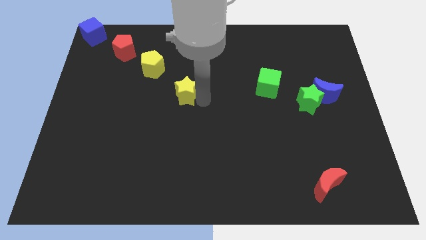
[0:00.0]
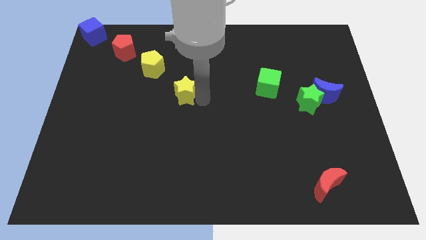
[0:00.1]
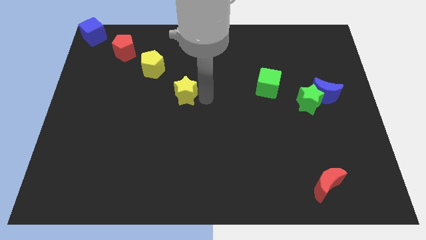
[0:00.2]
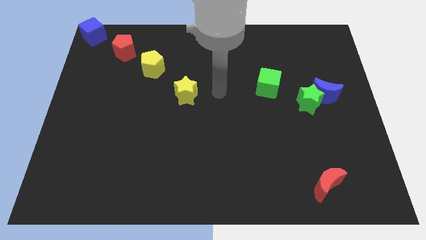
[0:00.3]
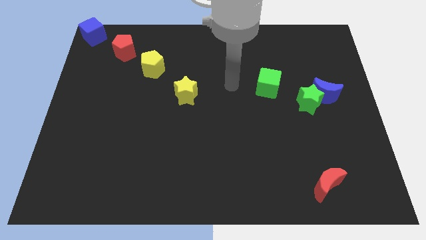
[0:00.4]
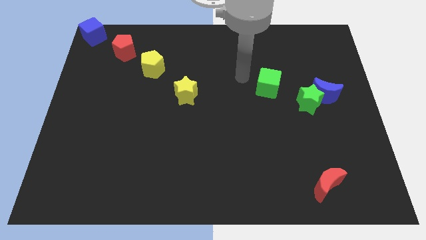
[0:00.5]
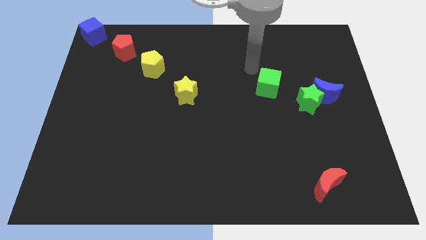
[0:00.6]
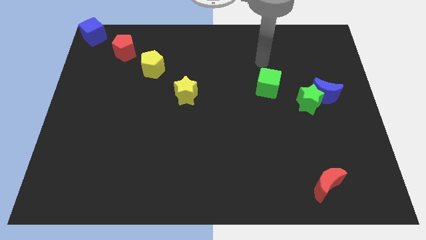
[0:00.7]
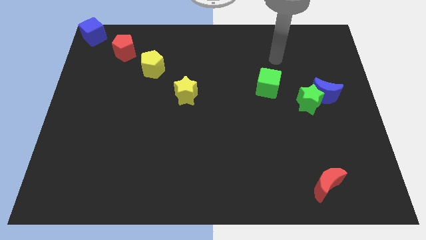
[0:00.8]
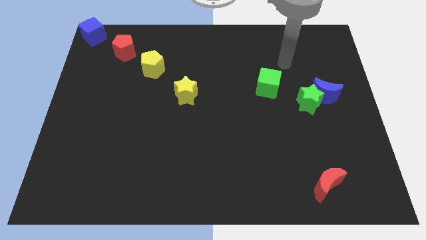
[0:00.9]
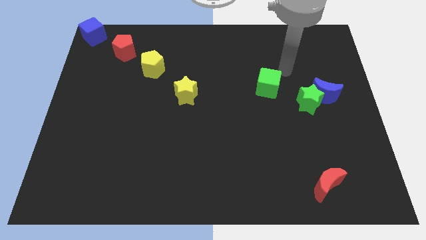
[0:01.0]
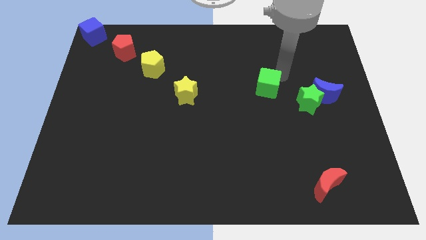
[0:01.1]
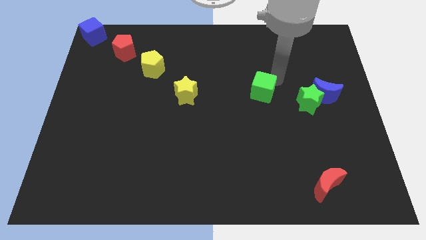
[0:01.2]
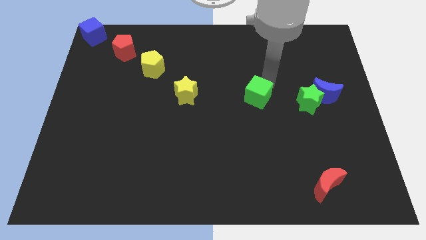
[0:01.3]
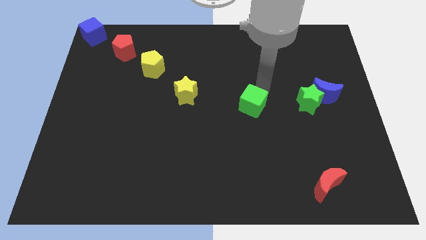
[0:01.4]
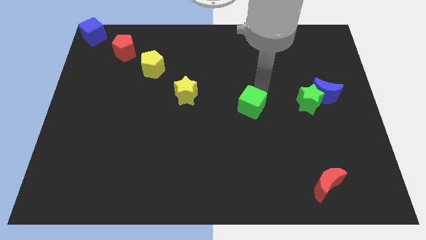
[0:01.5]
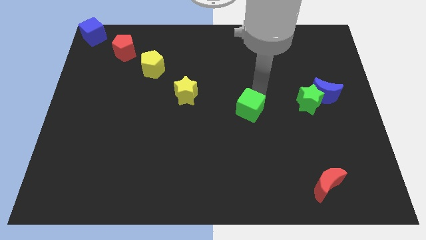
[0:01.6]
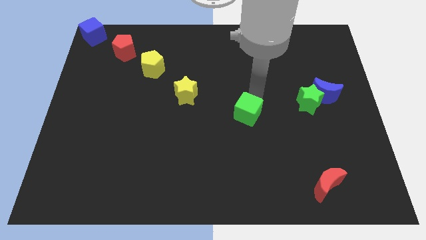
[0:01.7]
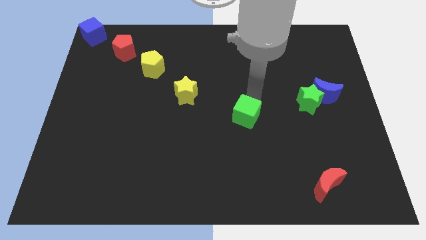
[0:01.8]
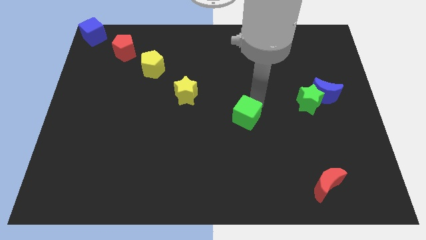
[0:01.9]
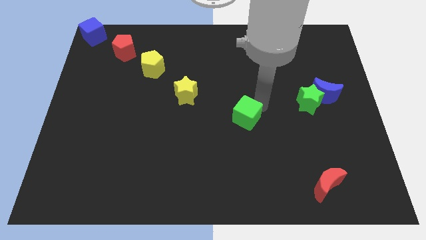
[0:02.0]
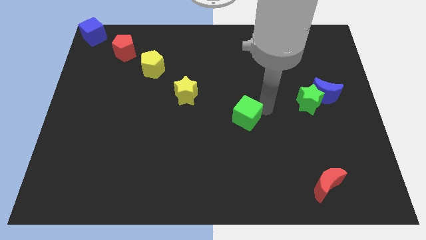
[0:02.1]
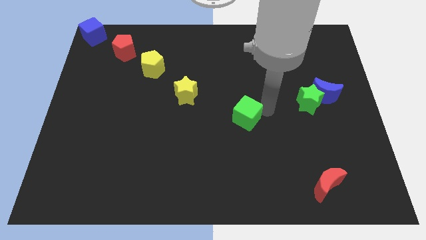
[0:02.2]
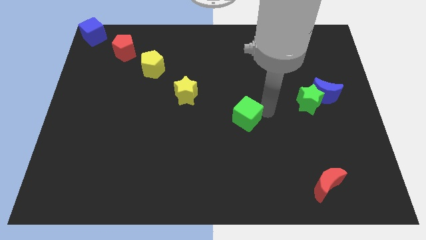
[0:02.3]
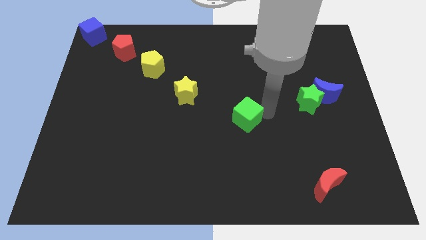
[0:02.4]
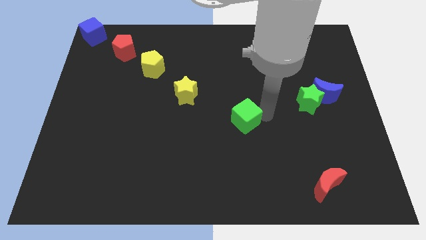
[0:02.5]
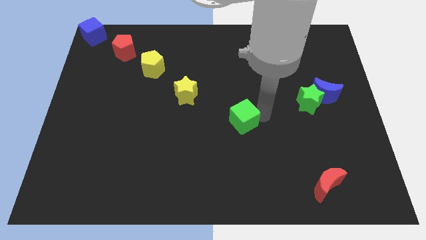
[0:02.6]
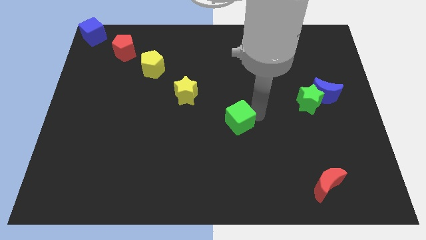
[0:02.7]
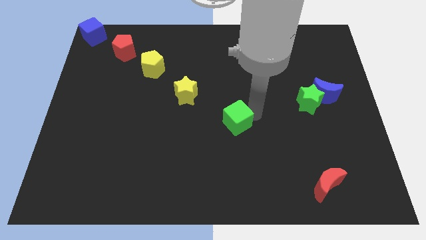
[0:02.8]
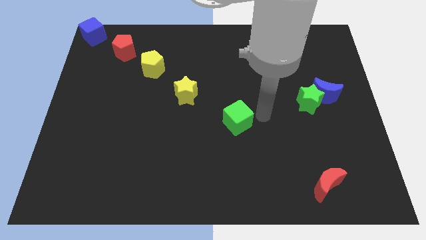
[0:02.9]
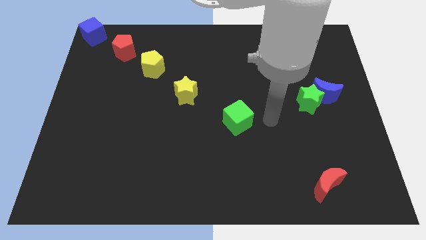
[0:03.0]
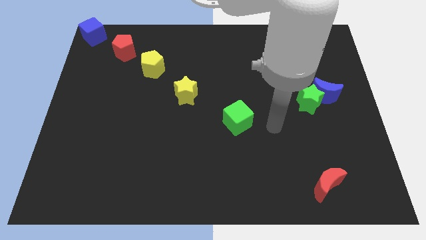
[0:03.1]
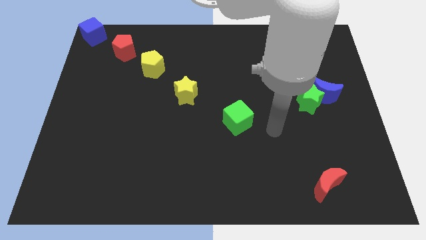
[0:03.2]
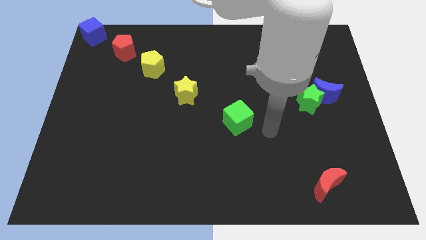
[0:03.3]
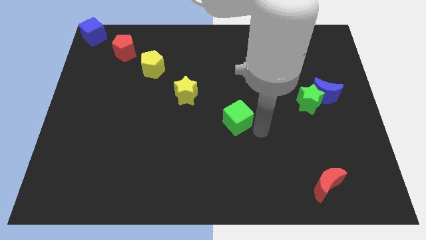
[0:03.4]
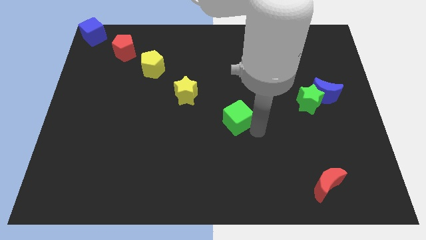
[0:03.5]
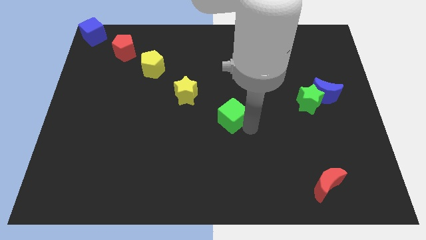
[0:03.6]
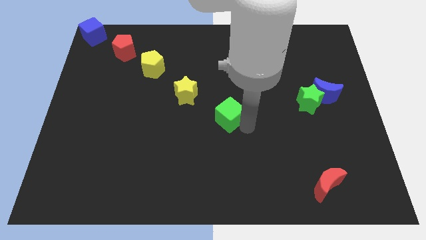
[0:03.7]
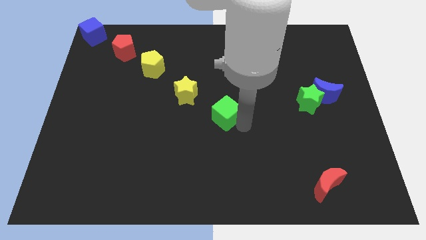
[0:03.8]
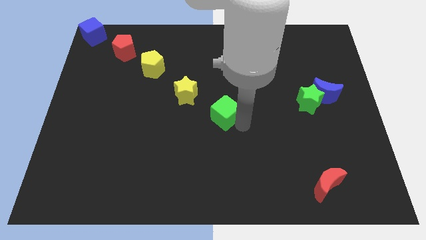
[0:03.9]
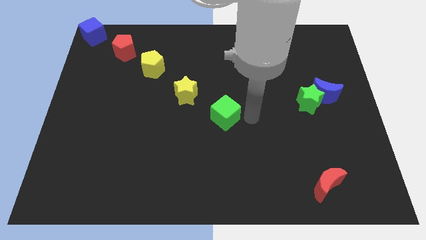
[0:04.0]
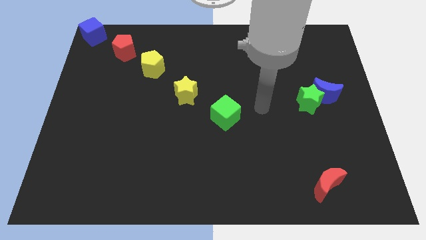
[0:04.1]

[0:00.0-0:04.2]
place the green cube to the center of the board

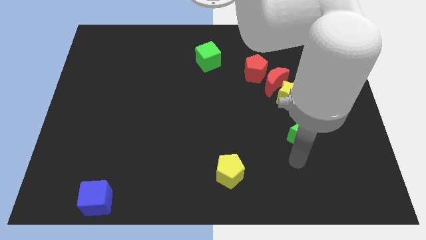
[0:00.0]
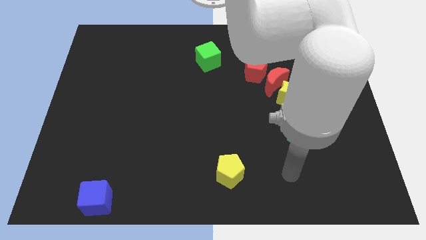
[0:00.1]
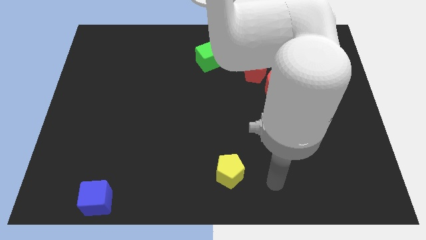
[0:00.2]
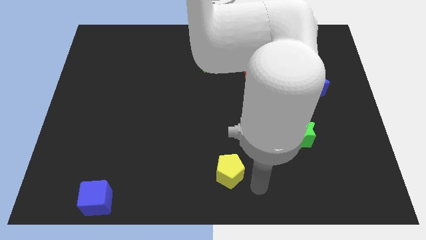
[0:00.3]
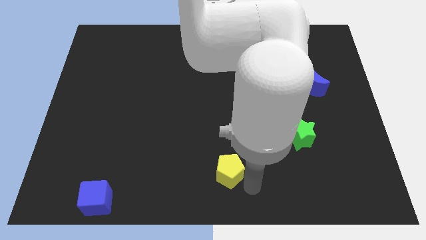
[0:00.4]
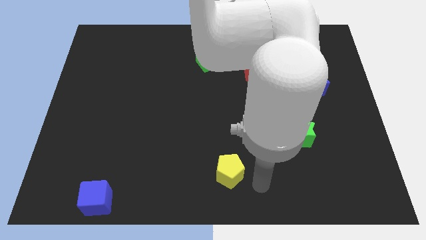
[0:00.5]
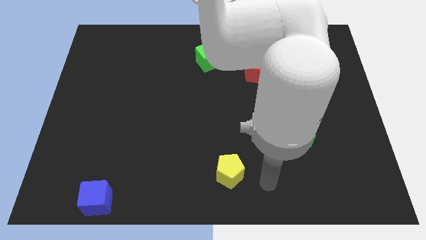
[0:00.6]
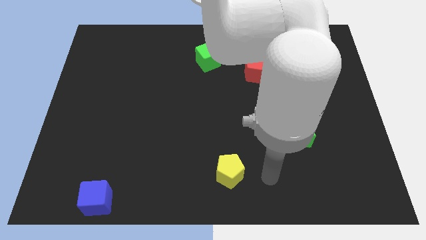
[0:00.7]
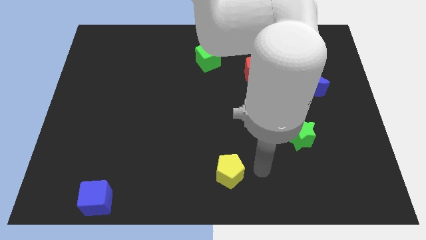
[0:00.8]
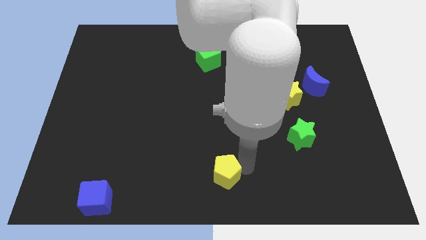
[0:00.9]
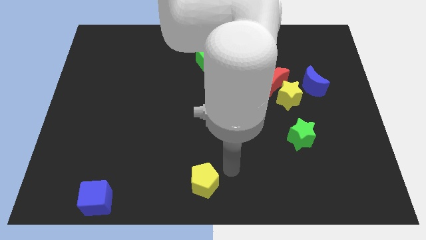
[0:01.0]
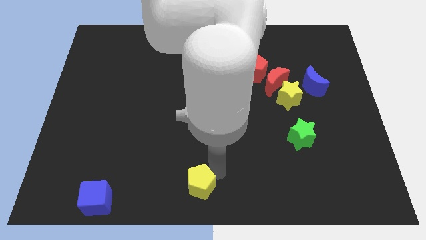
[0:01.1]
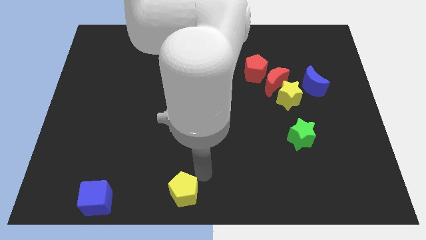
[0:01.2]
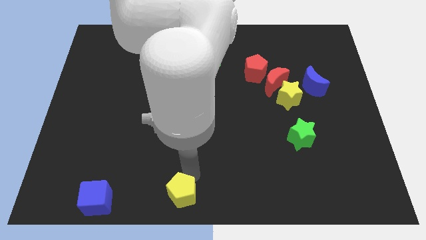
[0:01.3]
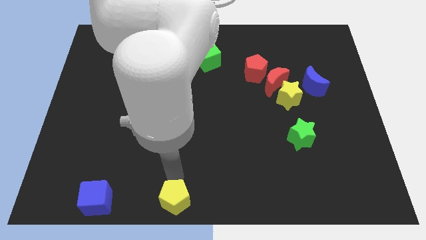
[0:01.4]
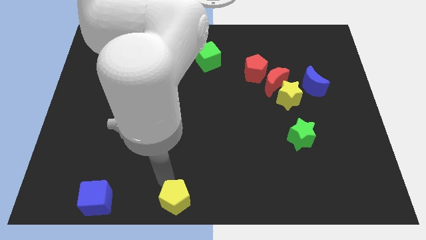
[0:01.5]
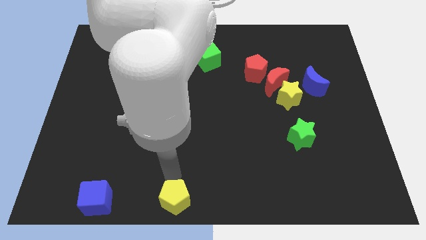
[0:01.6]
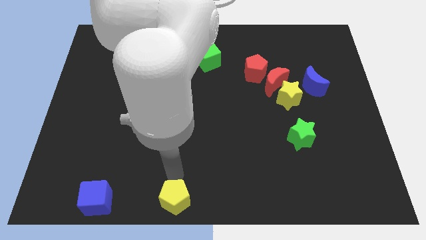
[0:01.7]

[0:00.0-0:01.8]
push the yellow pentagon right to the blue cube

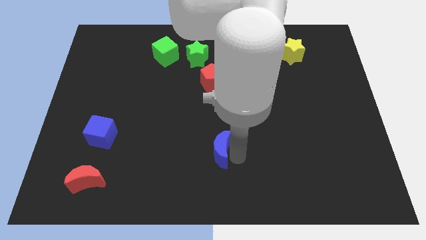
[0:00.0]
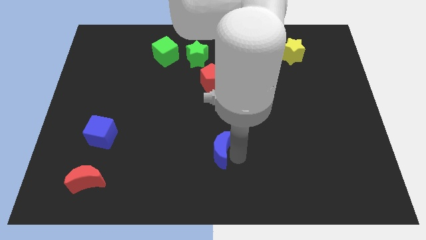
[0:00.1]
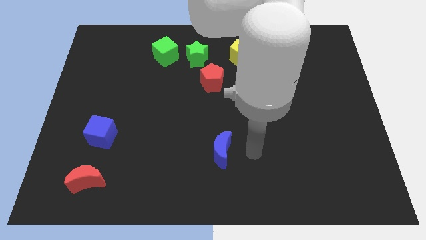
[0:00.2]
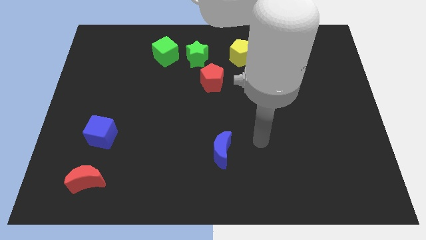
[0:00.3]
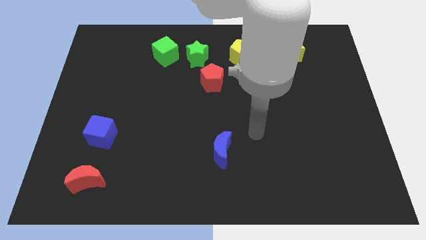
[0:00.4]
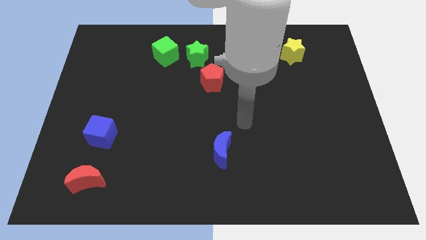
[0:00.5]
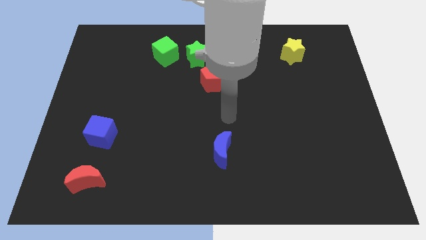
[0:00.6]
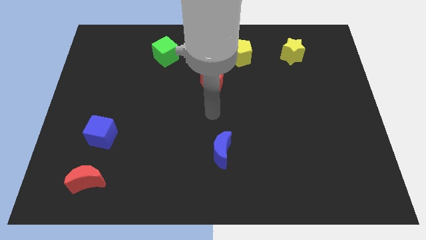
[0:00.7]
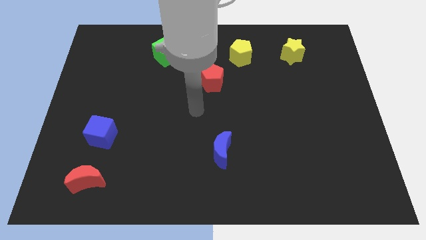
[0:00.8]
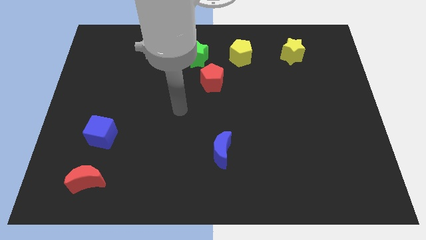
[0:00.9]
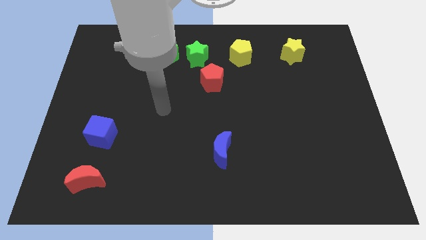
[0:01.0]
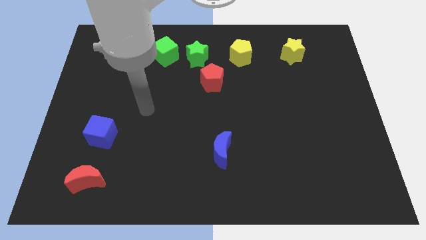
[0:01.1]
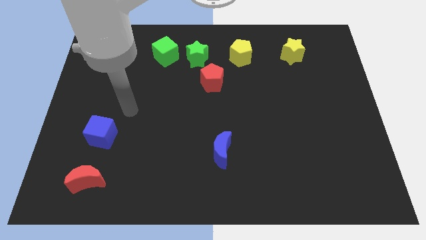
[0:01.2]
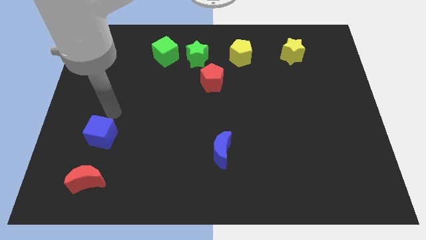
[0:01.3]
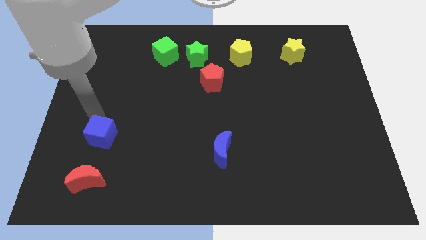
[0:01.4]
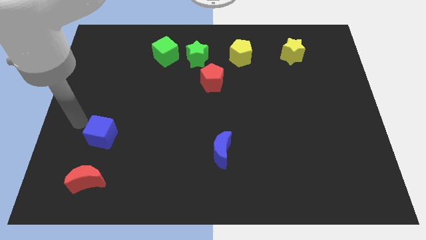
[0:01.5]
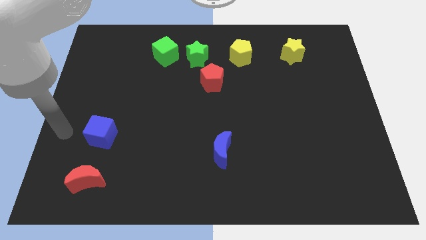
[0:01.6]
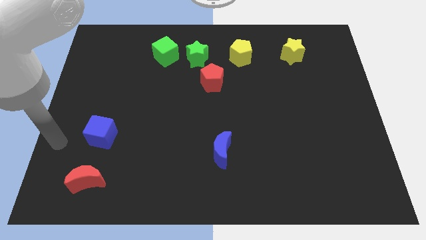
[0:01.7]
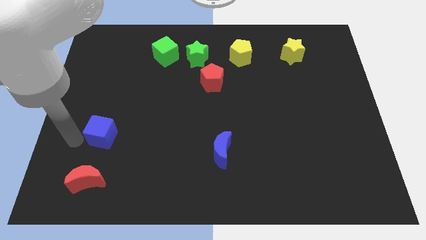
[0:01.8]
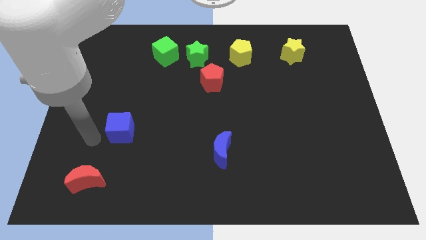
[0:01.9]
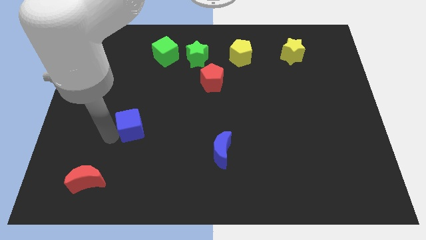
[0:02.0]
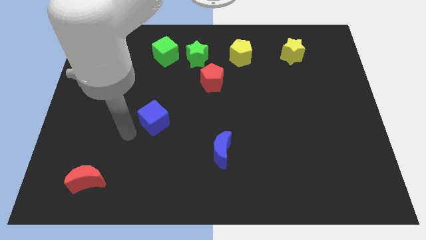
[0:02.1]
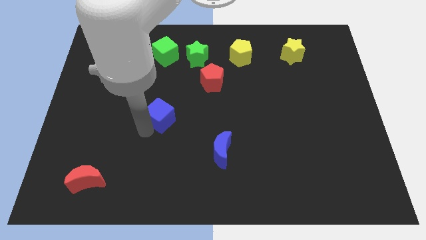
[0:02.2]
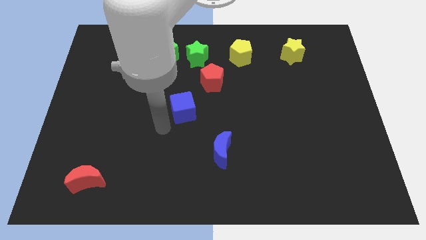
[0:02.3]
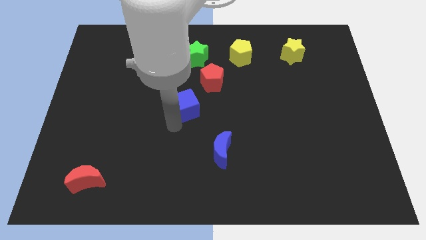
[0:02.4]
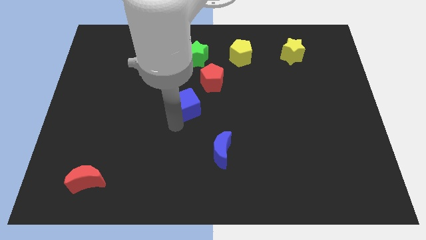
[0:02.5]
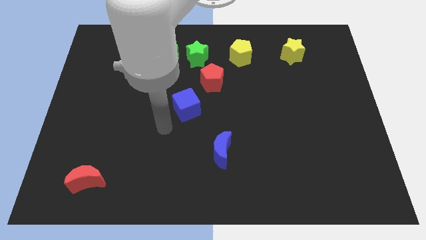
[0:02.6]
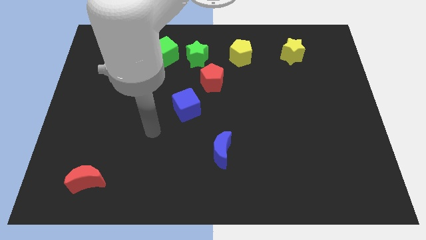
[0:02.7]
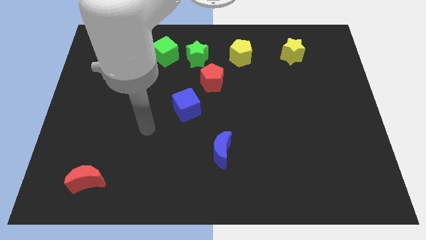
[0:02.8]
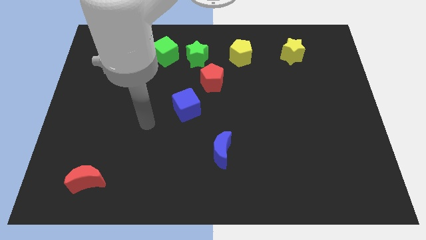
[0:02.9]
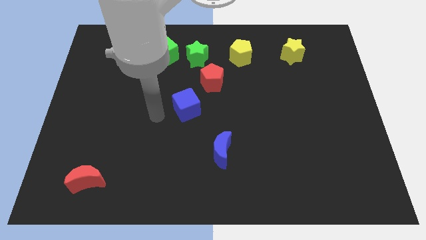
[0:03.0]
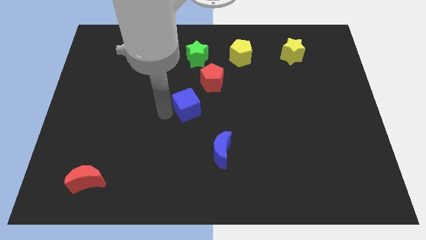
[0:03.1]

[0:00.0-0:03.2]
move the blue cube diagonally to the top left of the blue crescent
